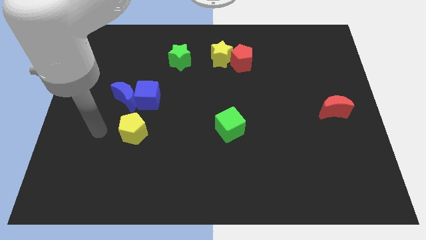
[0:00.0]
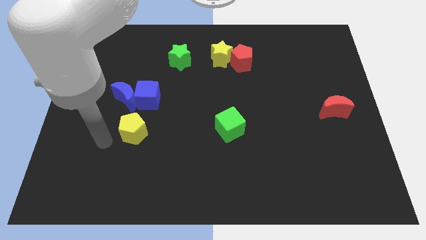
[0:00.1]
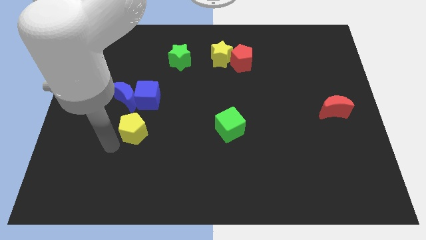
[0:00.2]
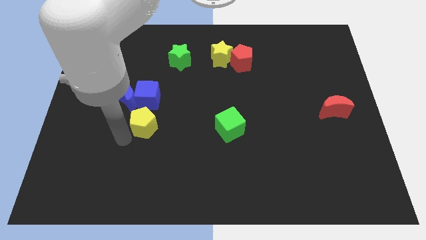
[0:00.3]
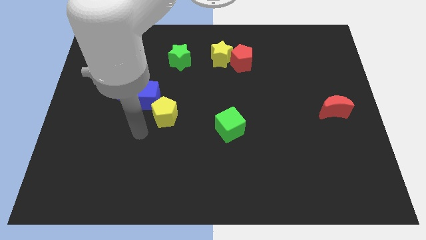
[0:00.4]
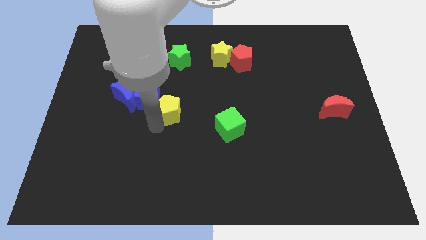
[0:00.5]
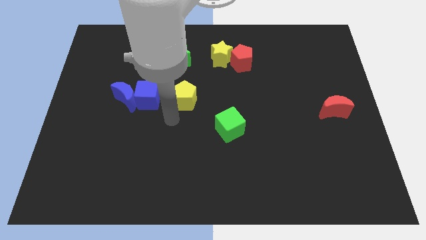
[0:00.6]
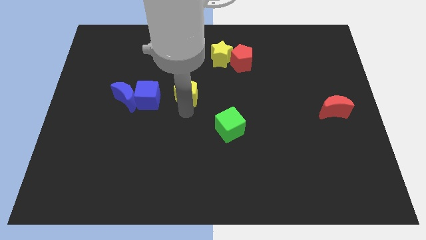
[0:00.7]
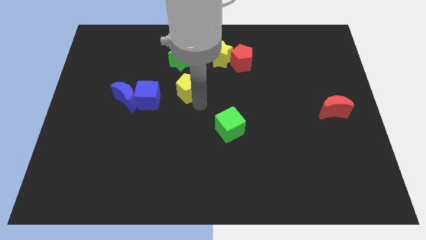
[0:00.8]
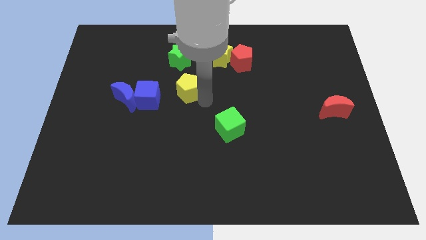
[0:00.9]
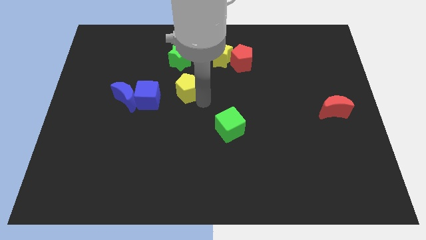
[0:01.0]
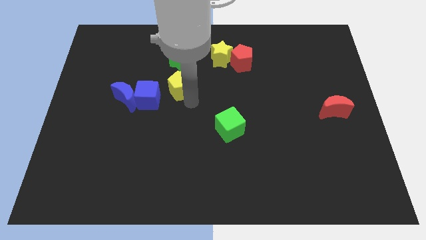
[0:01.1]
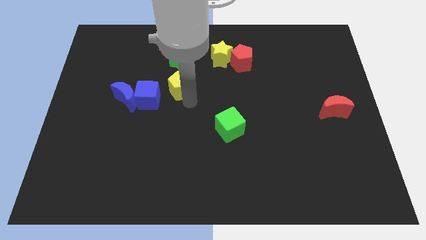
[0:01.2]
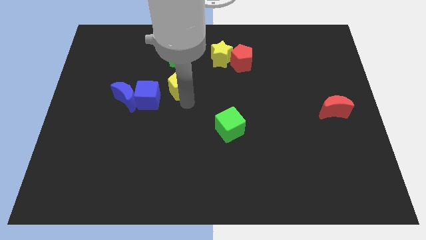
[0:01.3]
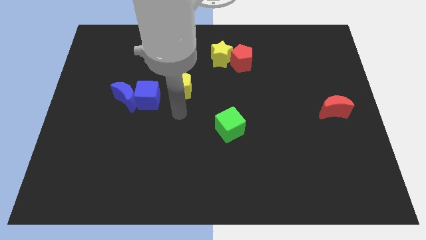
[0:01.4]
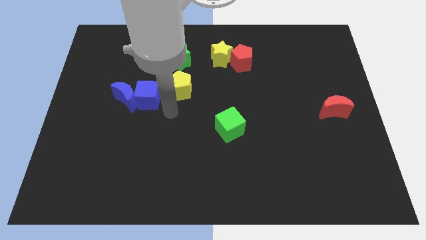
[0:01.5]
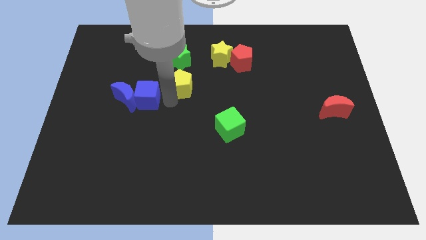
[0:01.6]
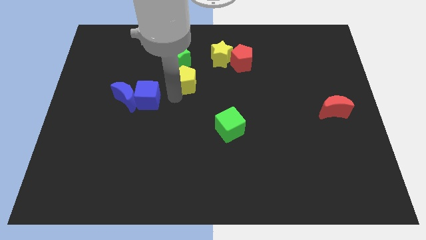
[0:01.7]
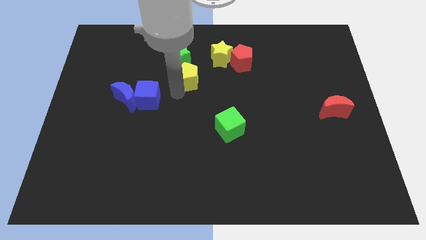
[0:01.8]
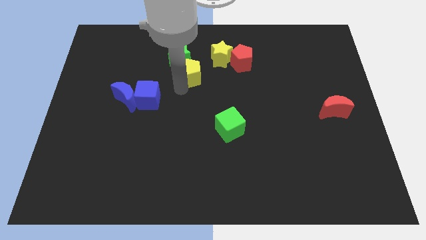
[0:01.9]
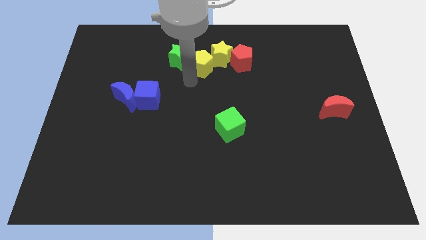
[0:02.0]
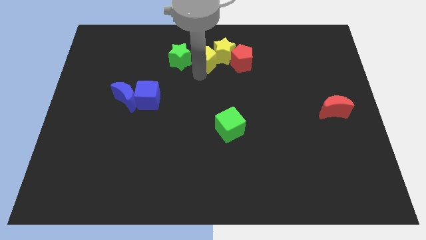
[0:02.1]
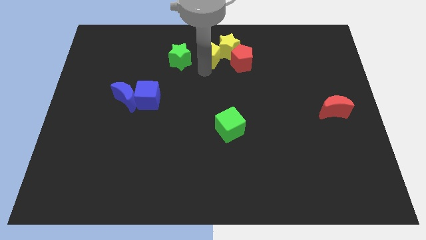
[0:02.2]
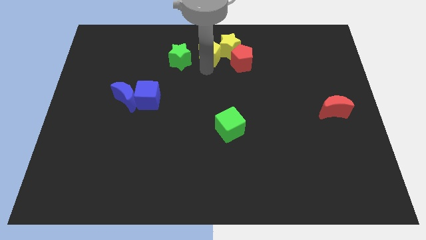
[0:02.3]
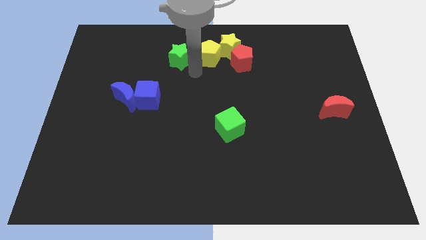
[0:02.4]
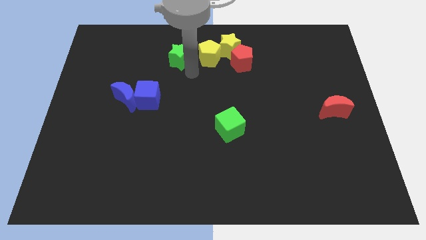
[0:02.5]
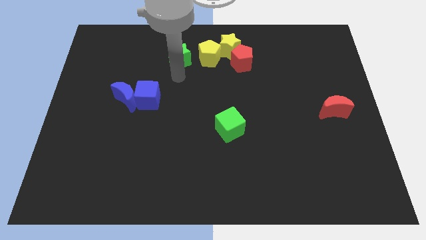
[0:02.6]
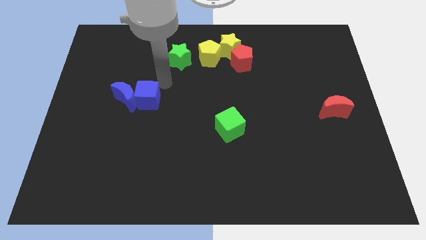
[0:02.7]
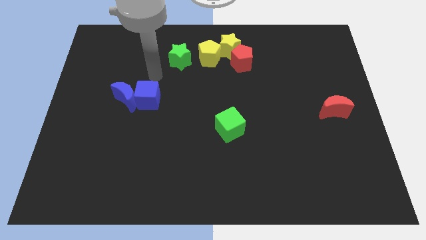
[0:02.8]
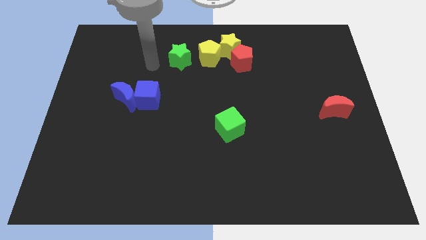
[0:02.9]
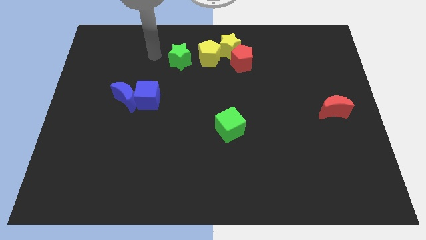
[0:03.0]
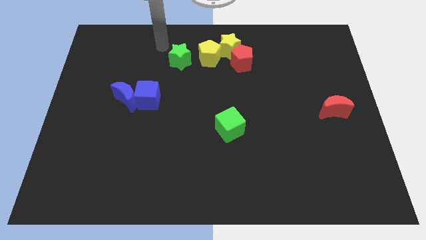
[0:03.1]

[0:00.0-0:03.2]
push the yellow pentagon between the green star and red pentagon

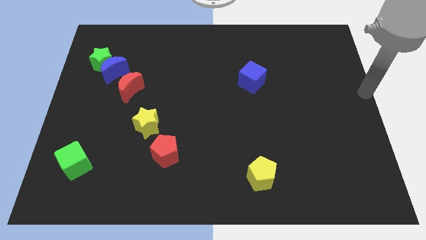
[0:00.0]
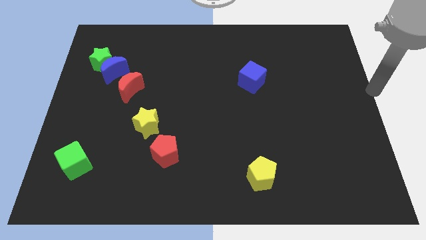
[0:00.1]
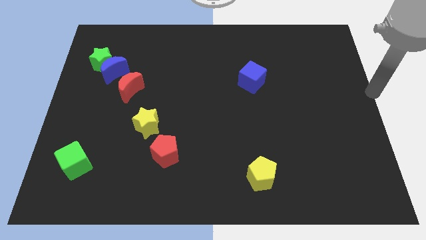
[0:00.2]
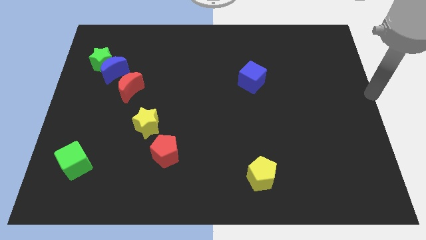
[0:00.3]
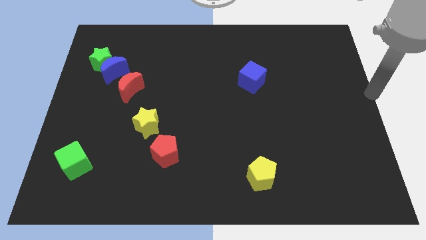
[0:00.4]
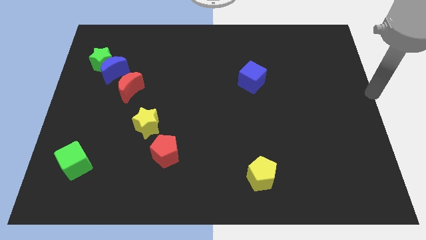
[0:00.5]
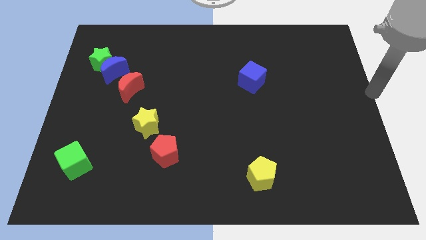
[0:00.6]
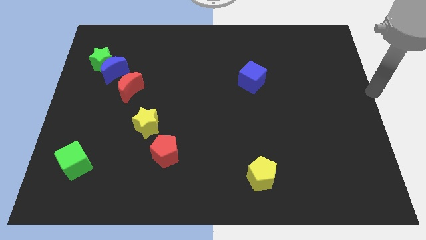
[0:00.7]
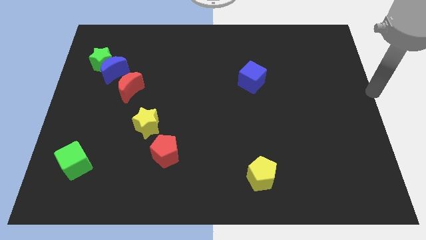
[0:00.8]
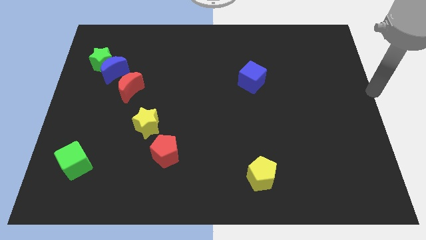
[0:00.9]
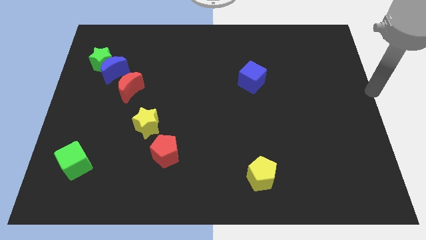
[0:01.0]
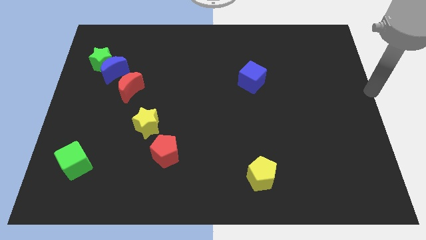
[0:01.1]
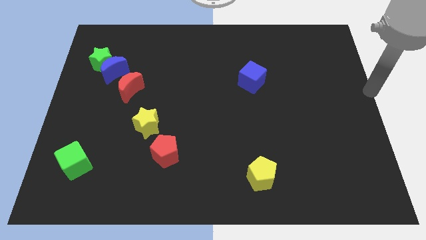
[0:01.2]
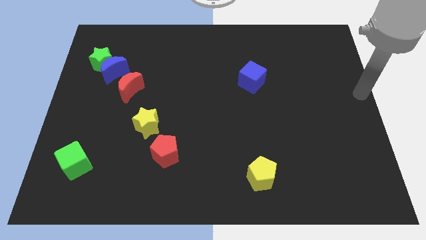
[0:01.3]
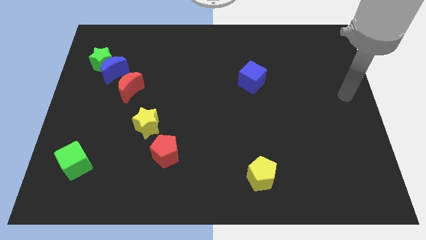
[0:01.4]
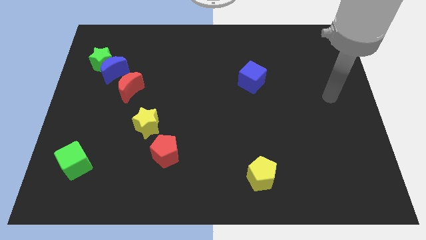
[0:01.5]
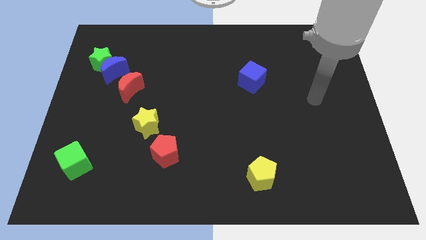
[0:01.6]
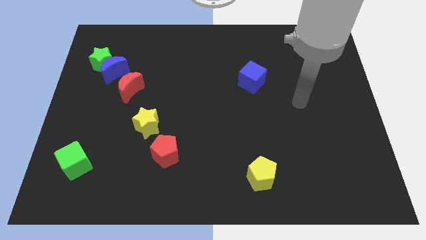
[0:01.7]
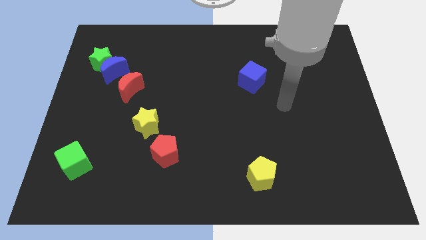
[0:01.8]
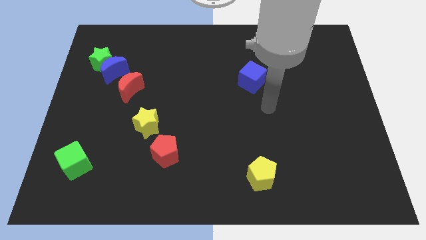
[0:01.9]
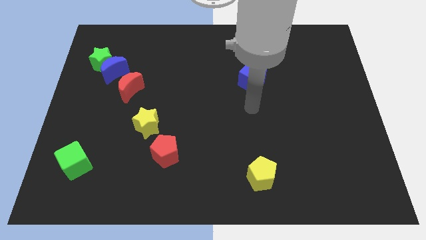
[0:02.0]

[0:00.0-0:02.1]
move your arm to the bottom of the blue cube

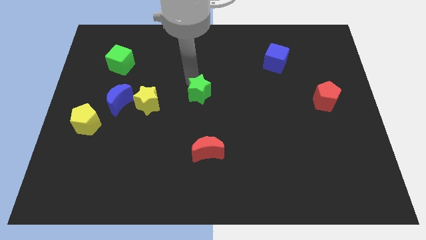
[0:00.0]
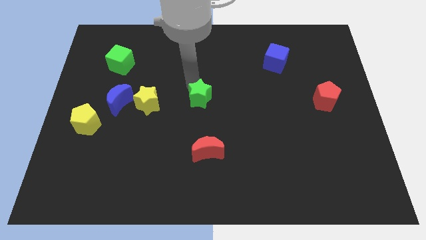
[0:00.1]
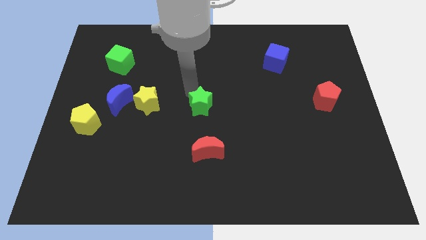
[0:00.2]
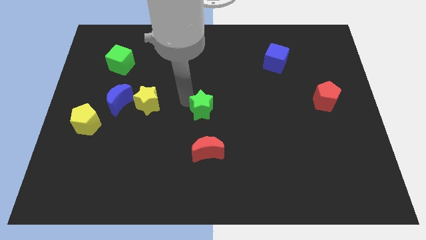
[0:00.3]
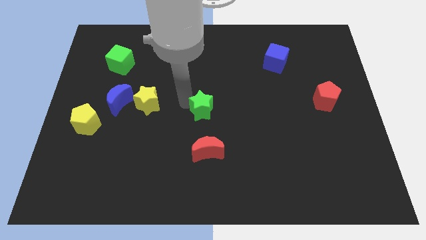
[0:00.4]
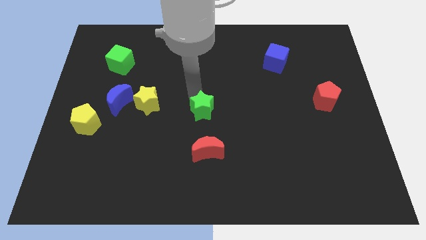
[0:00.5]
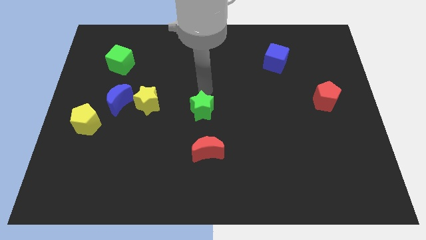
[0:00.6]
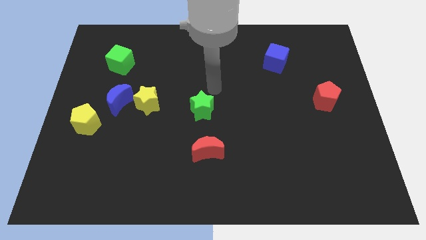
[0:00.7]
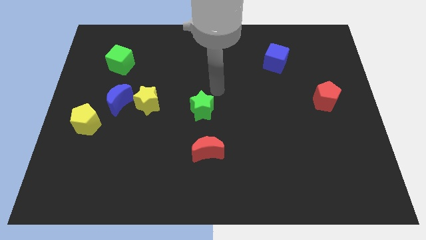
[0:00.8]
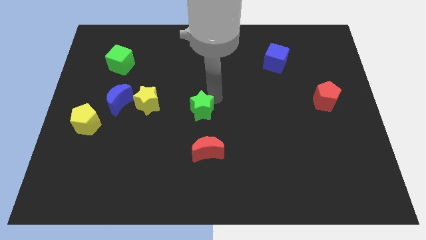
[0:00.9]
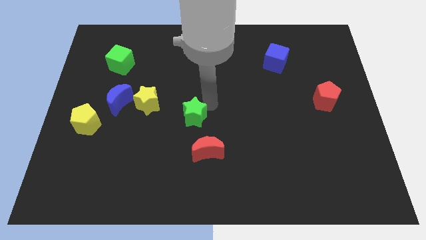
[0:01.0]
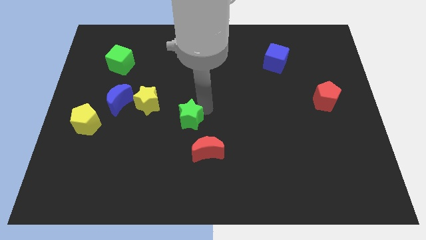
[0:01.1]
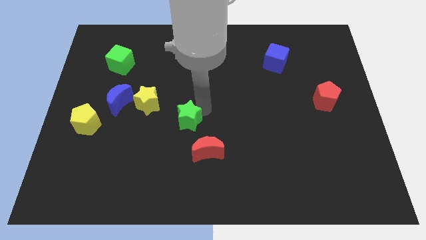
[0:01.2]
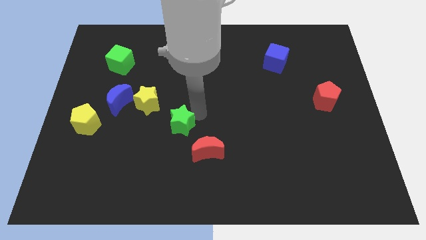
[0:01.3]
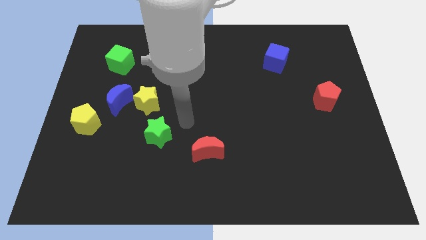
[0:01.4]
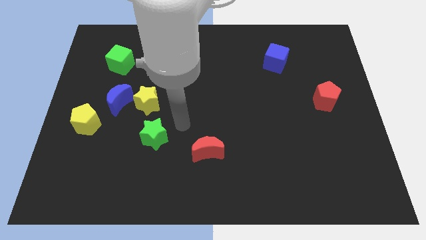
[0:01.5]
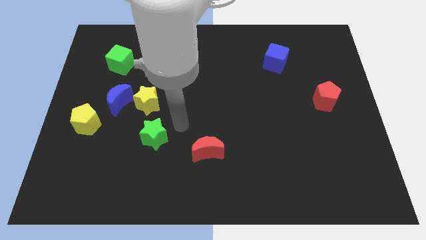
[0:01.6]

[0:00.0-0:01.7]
place the green star below the yellow star

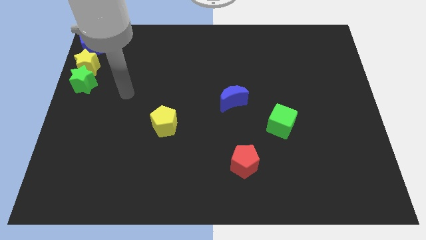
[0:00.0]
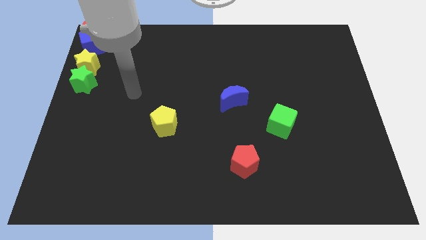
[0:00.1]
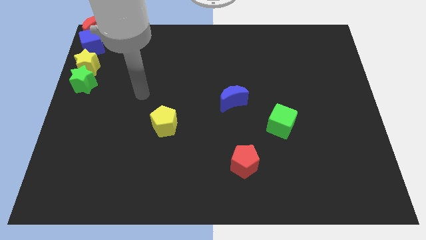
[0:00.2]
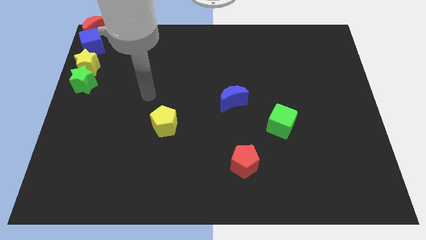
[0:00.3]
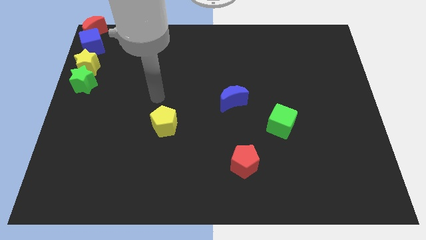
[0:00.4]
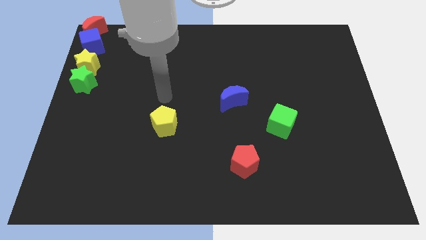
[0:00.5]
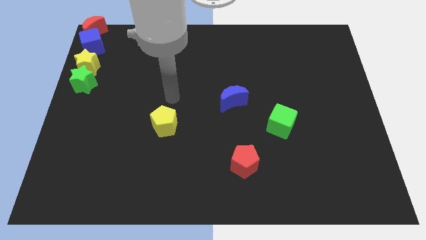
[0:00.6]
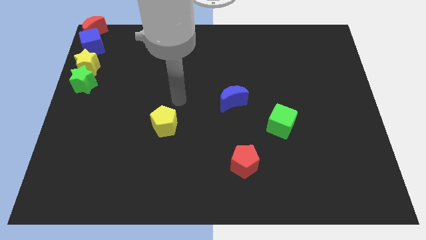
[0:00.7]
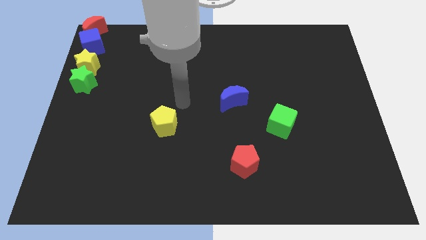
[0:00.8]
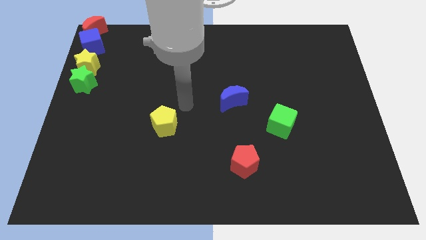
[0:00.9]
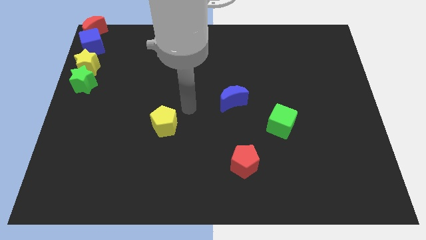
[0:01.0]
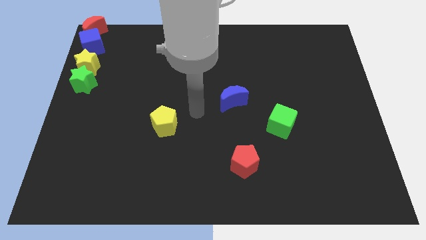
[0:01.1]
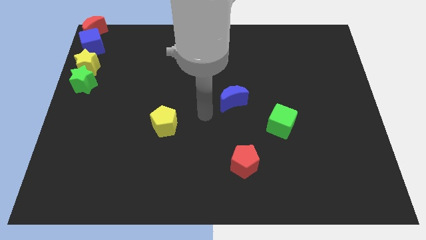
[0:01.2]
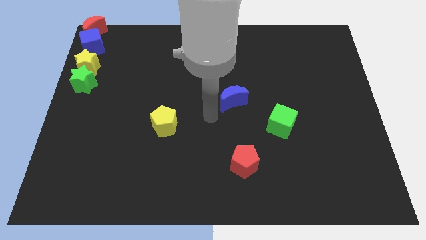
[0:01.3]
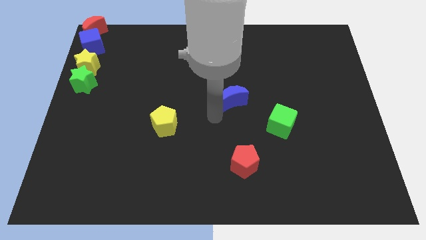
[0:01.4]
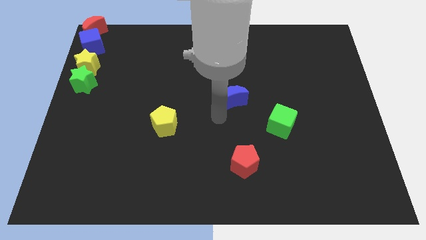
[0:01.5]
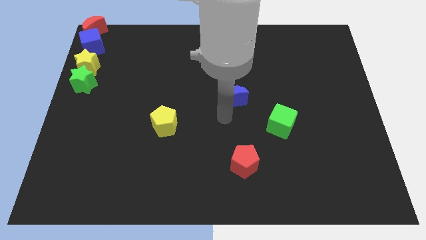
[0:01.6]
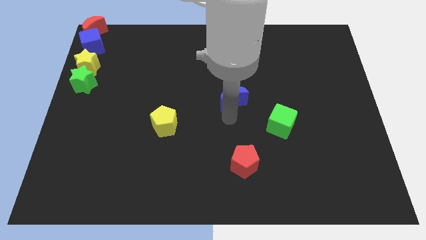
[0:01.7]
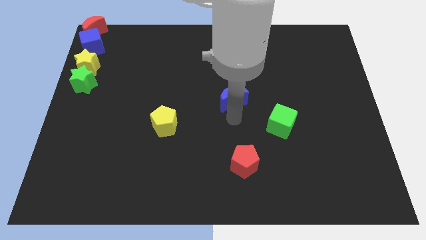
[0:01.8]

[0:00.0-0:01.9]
point your arm at the bottom of the blue crescent
